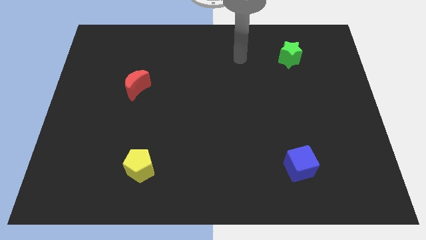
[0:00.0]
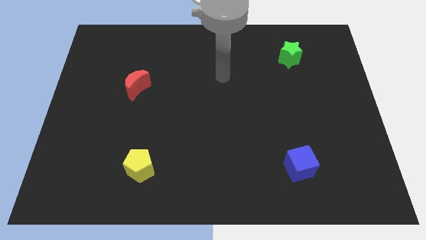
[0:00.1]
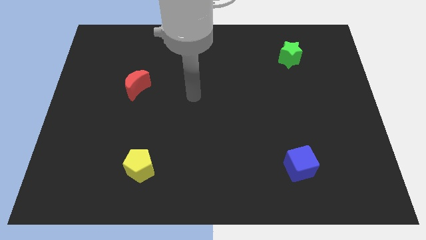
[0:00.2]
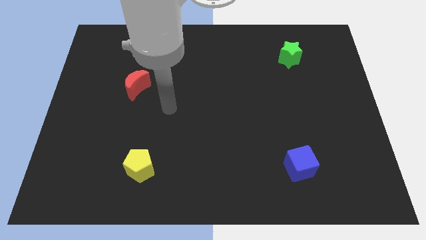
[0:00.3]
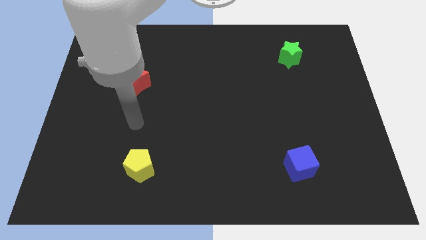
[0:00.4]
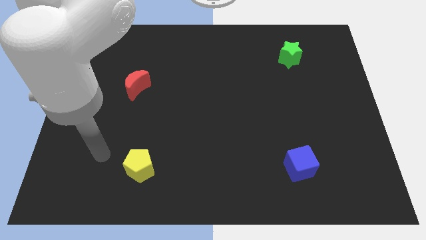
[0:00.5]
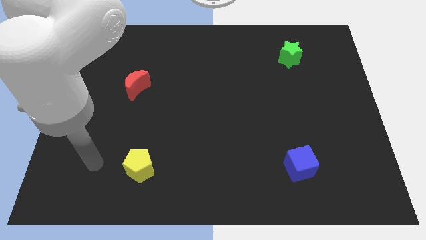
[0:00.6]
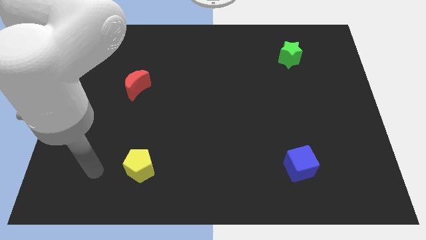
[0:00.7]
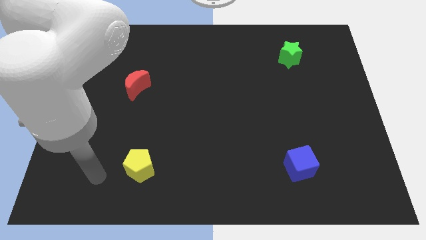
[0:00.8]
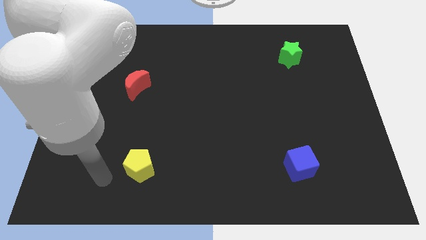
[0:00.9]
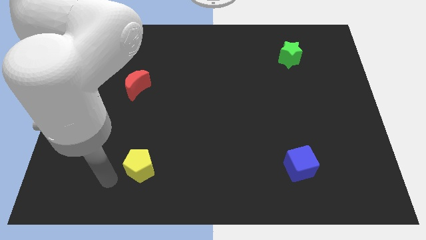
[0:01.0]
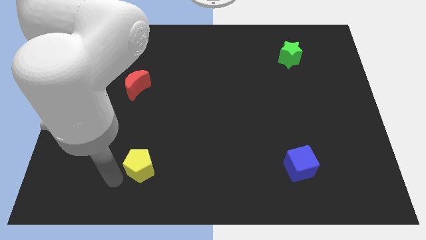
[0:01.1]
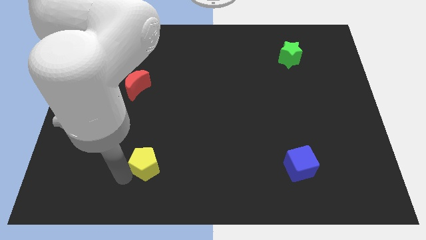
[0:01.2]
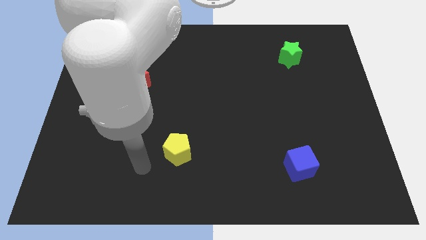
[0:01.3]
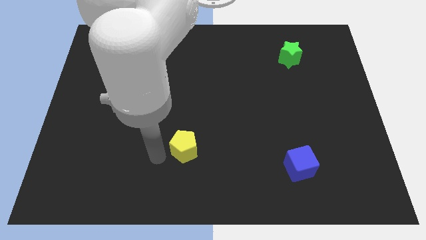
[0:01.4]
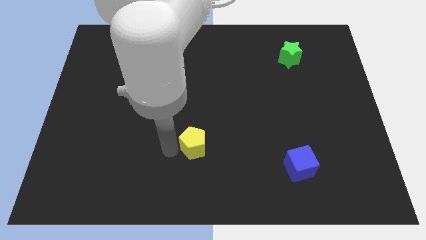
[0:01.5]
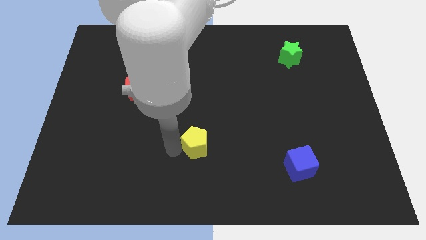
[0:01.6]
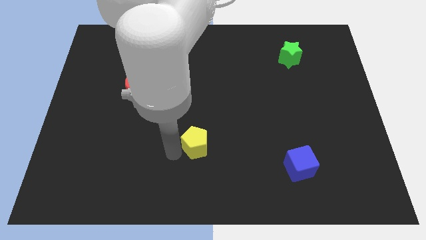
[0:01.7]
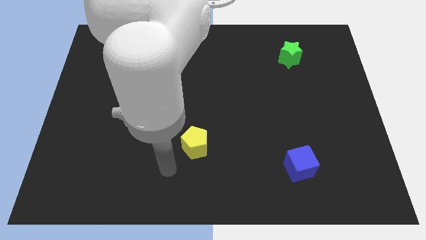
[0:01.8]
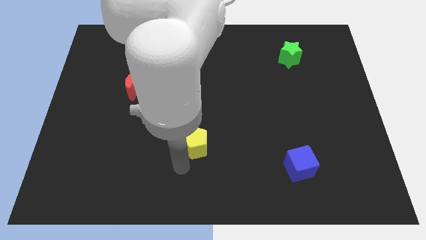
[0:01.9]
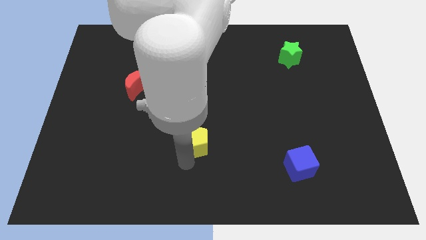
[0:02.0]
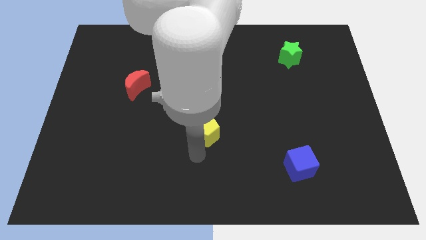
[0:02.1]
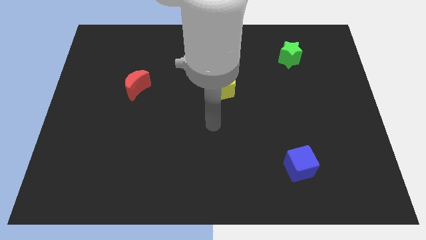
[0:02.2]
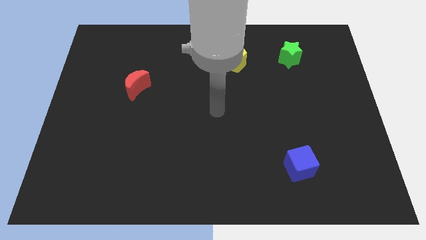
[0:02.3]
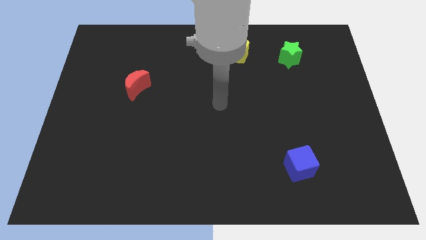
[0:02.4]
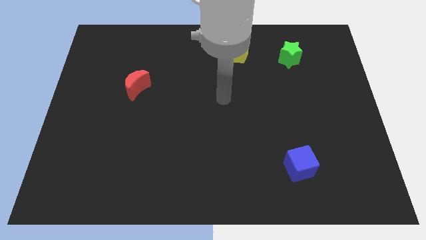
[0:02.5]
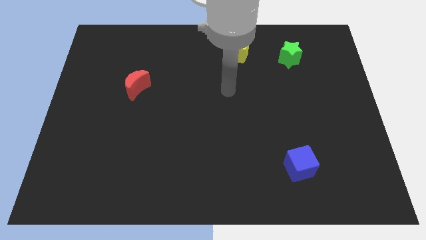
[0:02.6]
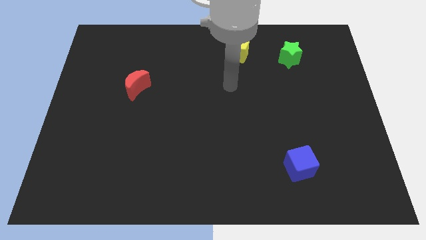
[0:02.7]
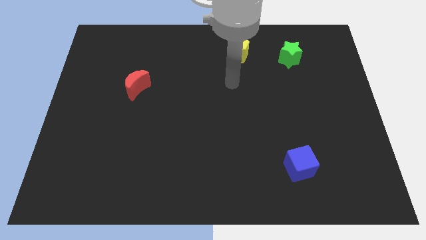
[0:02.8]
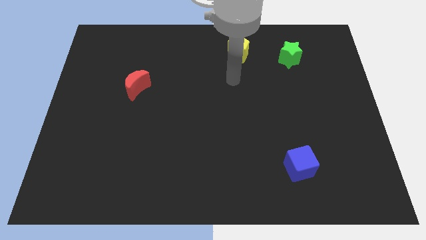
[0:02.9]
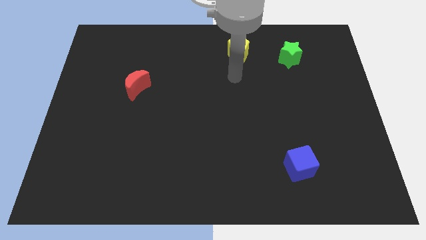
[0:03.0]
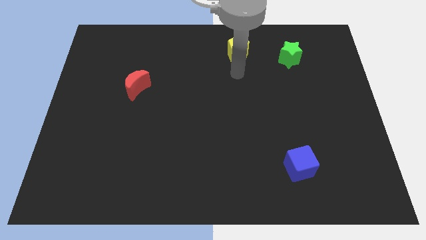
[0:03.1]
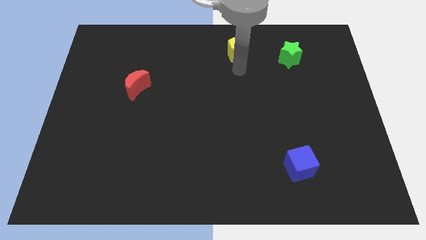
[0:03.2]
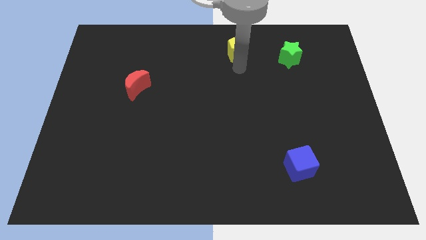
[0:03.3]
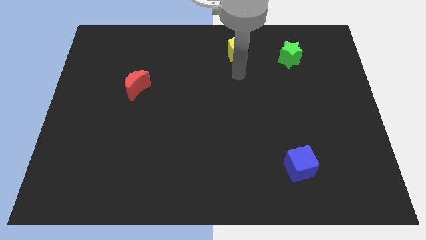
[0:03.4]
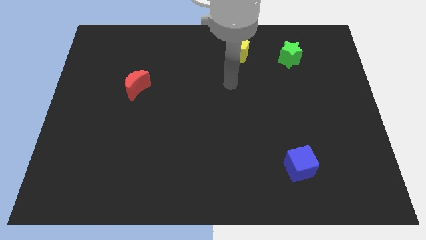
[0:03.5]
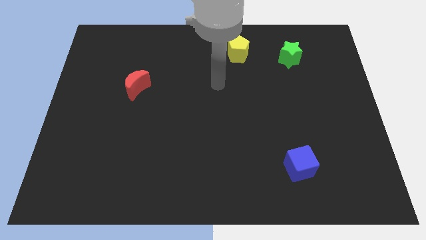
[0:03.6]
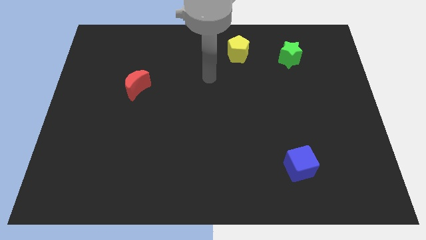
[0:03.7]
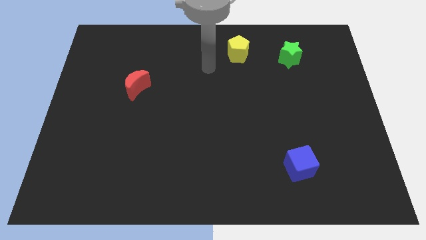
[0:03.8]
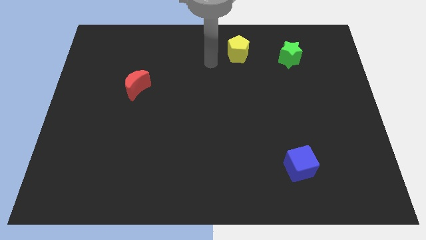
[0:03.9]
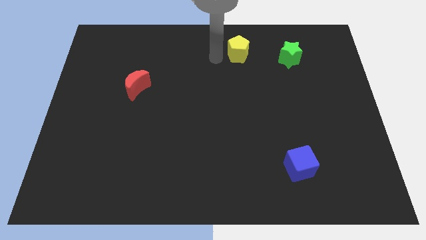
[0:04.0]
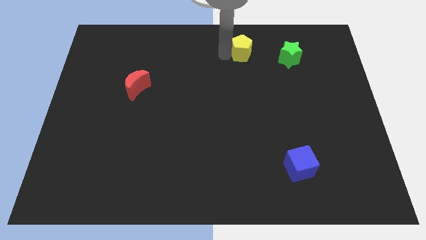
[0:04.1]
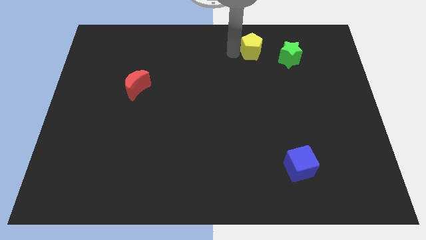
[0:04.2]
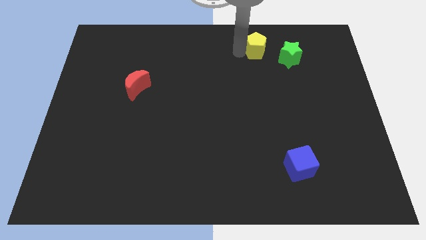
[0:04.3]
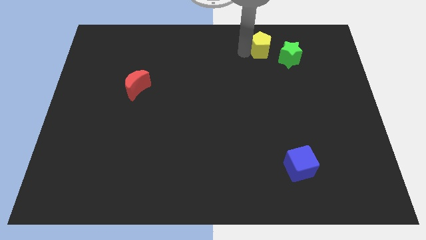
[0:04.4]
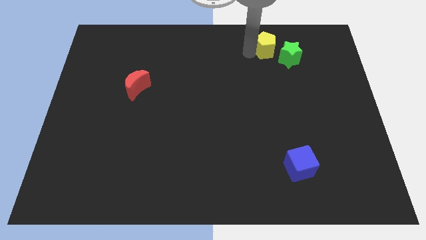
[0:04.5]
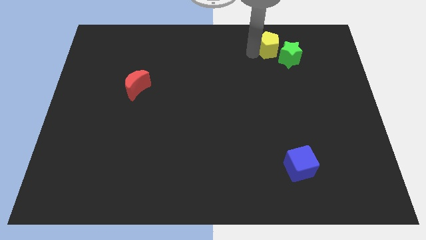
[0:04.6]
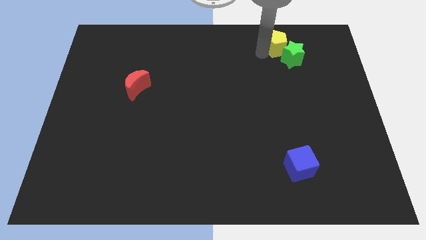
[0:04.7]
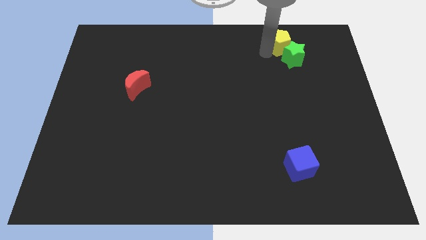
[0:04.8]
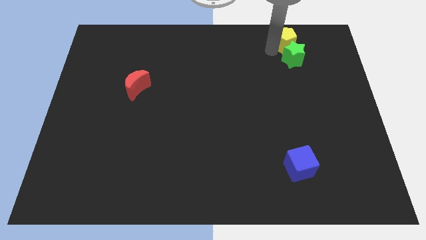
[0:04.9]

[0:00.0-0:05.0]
move the pentagon to the green block

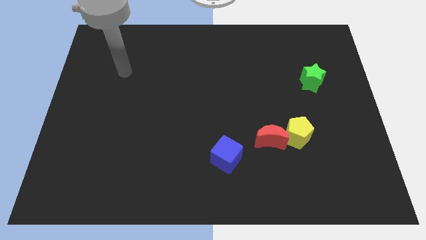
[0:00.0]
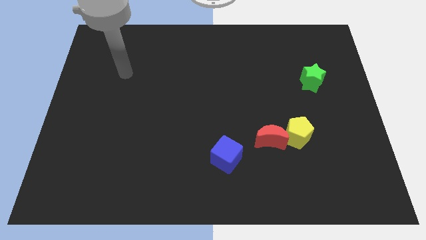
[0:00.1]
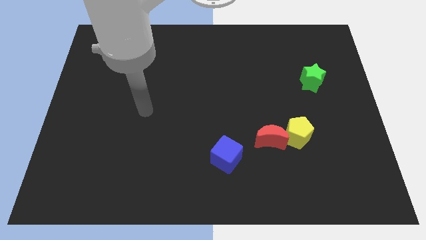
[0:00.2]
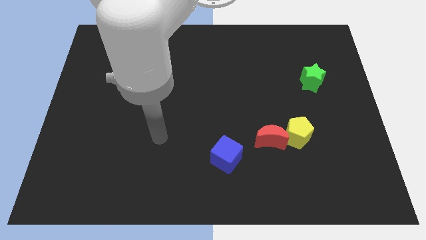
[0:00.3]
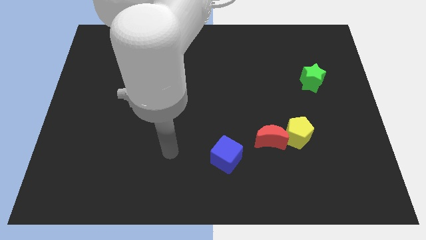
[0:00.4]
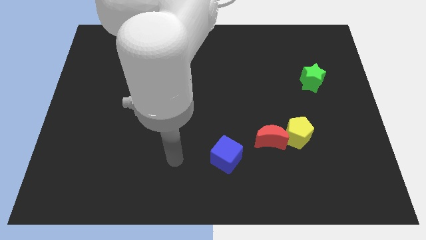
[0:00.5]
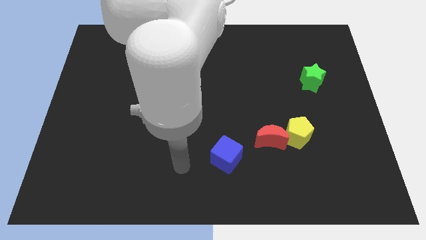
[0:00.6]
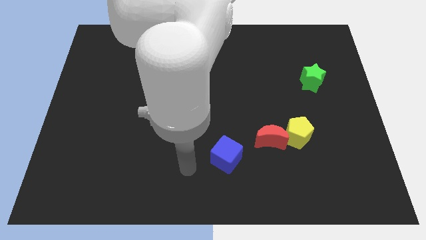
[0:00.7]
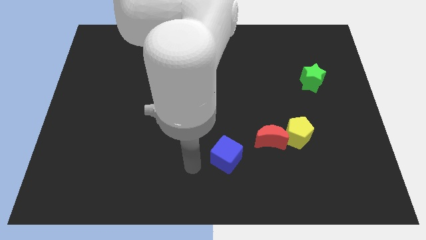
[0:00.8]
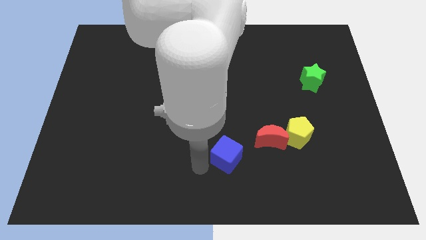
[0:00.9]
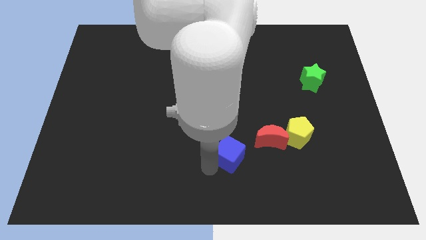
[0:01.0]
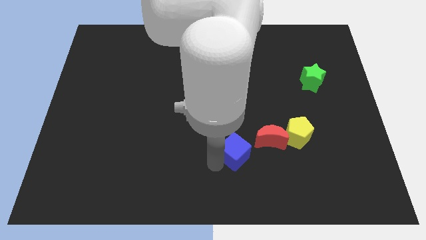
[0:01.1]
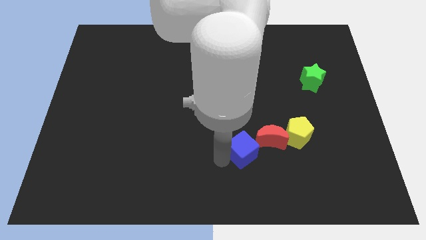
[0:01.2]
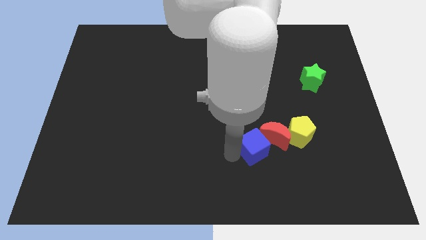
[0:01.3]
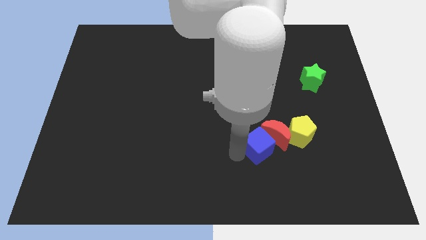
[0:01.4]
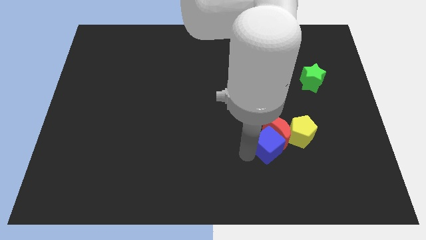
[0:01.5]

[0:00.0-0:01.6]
slide the cube close to the red moon

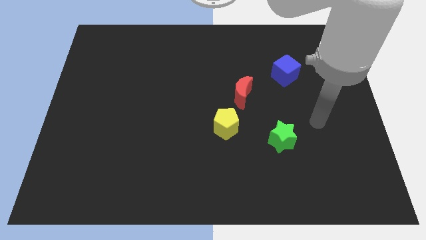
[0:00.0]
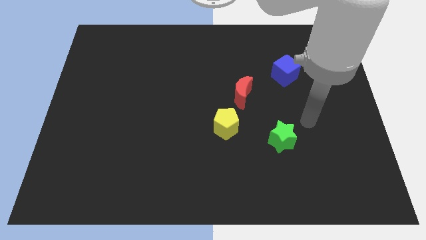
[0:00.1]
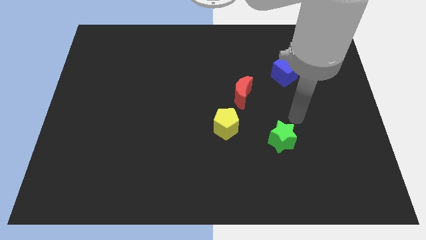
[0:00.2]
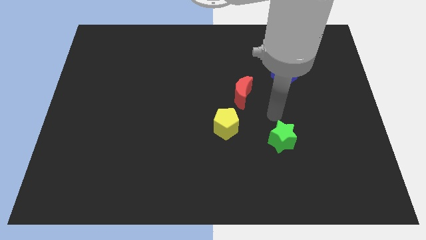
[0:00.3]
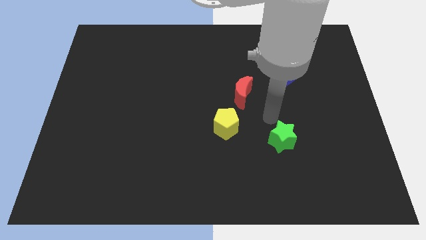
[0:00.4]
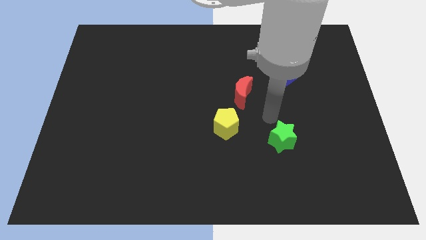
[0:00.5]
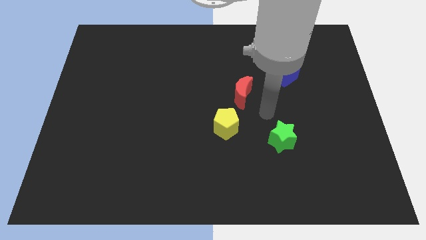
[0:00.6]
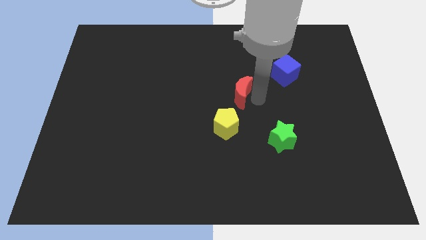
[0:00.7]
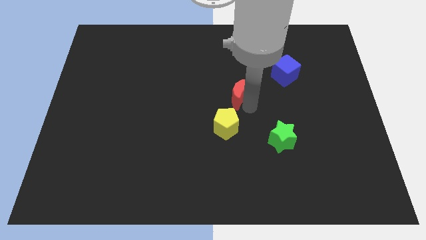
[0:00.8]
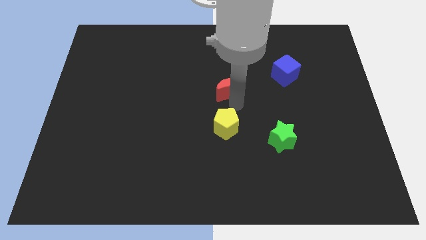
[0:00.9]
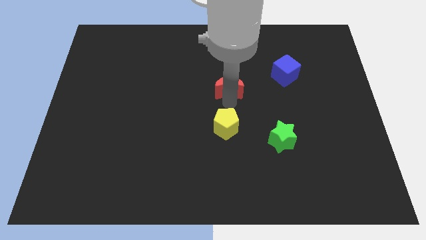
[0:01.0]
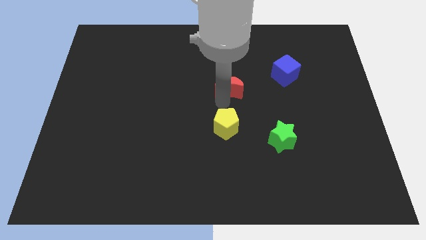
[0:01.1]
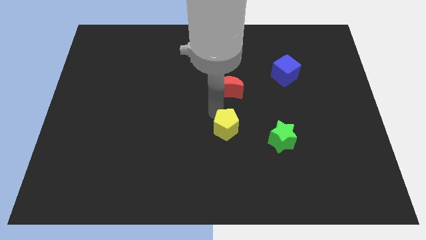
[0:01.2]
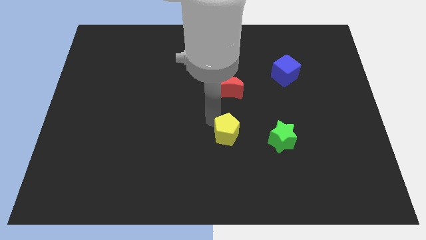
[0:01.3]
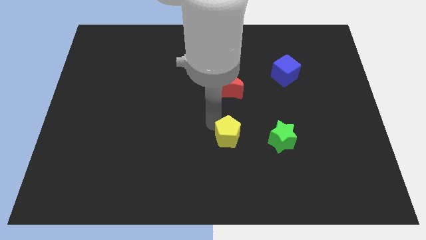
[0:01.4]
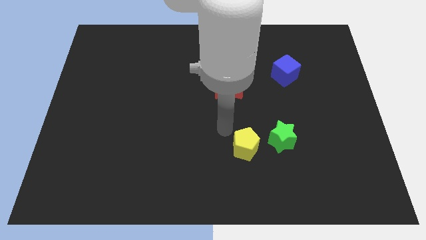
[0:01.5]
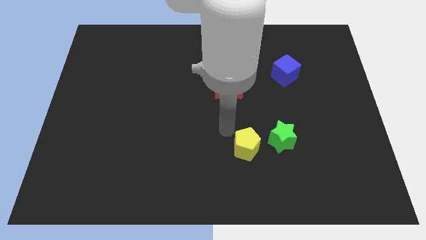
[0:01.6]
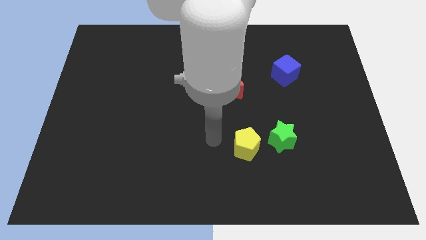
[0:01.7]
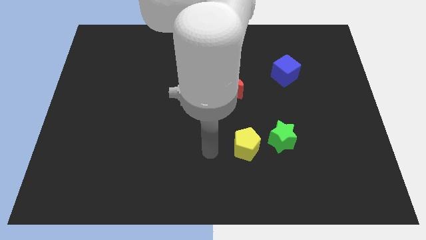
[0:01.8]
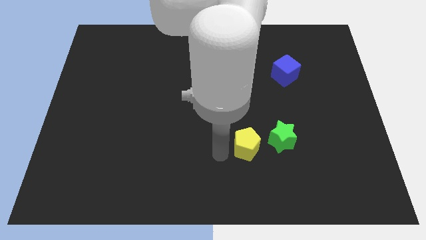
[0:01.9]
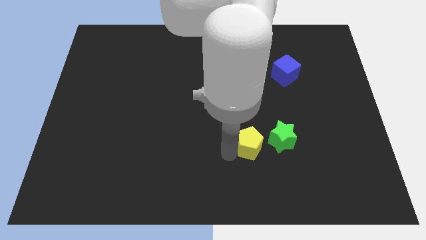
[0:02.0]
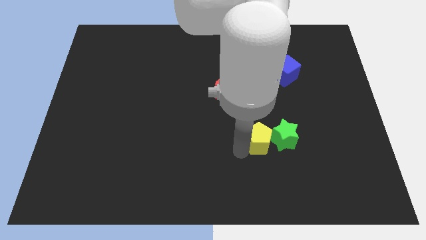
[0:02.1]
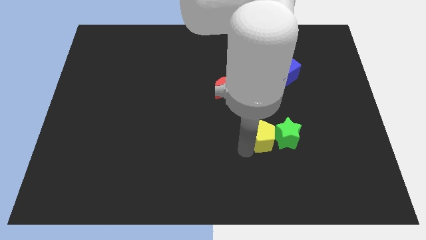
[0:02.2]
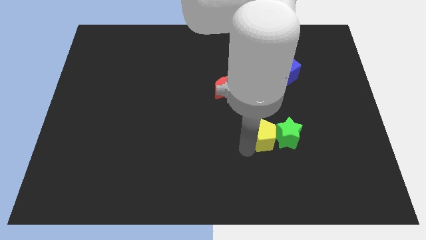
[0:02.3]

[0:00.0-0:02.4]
put the yellow pentagon next to the green block
